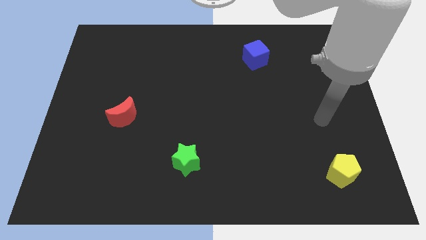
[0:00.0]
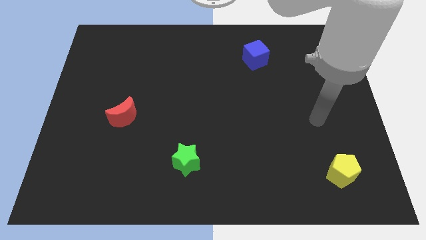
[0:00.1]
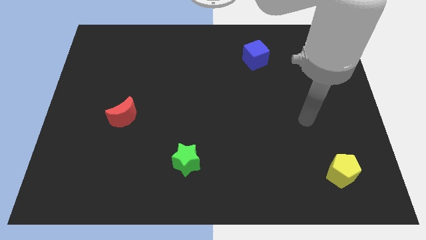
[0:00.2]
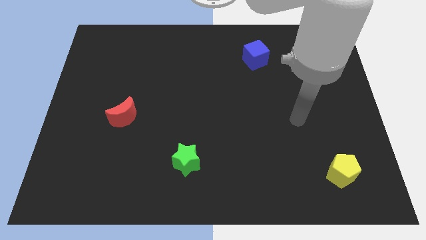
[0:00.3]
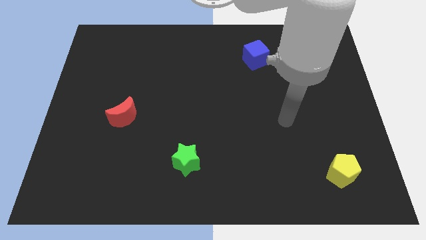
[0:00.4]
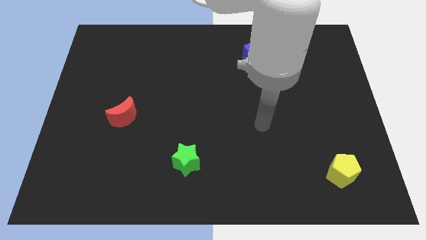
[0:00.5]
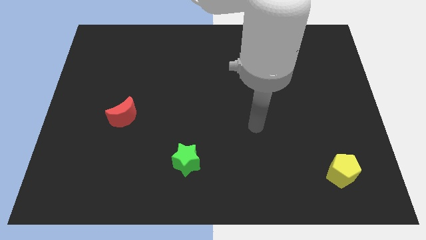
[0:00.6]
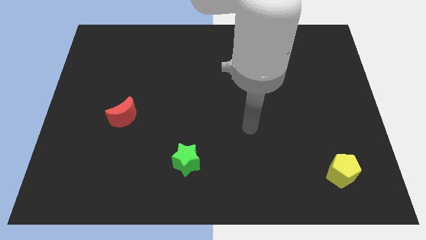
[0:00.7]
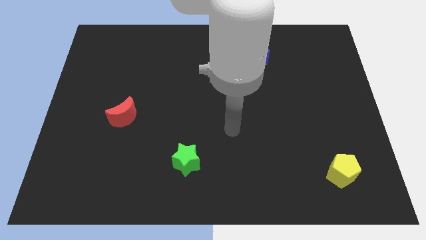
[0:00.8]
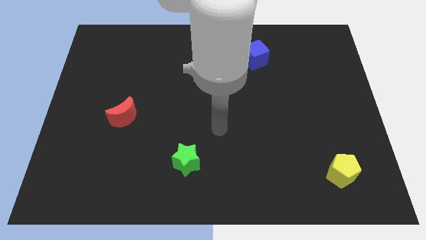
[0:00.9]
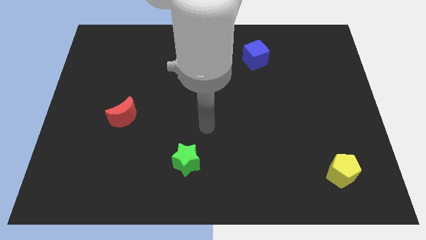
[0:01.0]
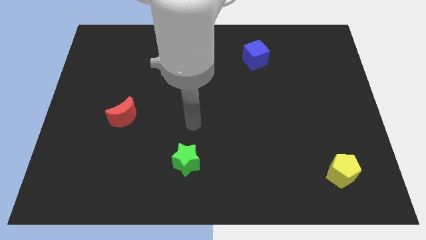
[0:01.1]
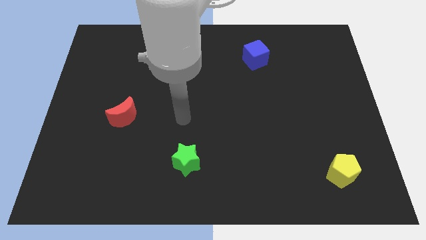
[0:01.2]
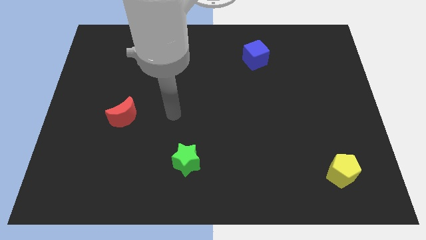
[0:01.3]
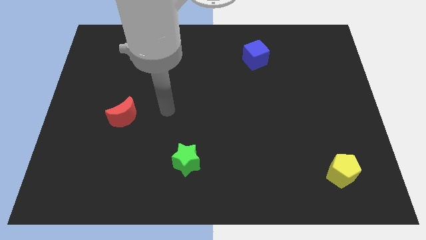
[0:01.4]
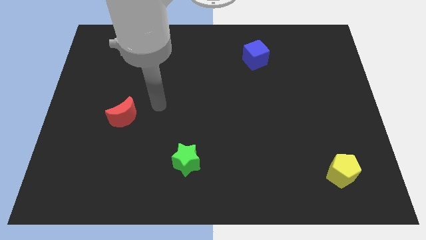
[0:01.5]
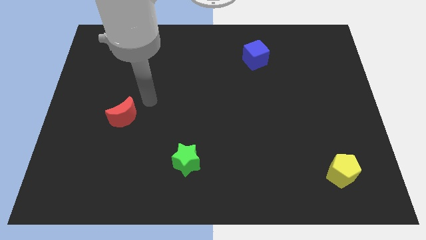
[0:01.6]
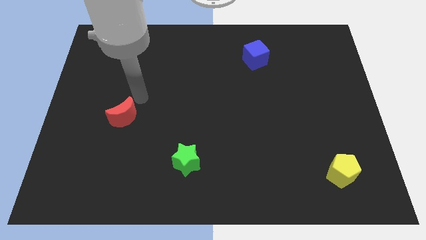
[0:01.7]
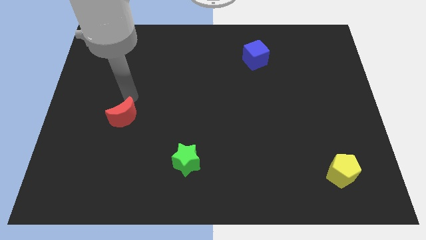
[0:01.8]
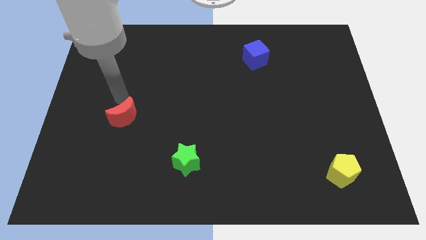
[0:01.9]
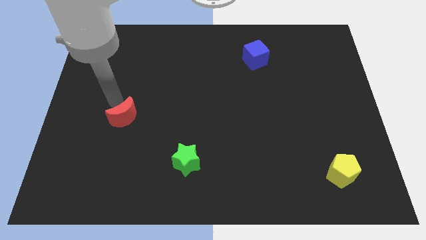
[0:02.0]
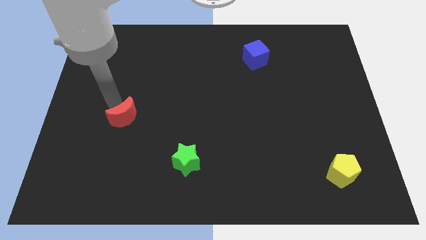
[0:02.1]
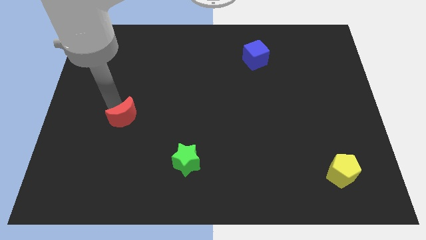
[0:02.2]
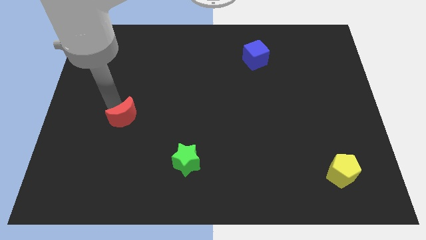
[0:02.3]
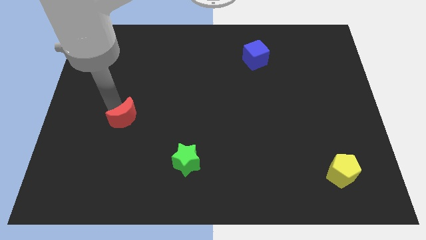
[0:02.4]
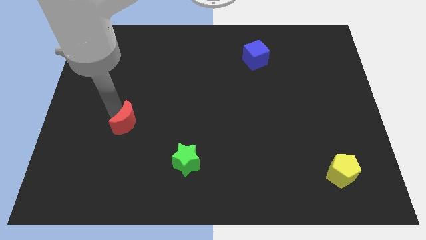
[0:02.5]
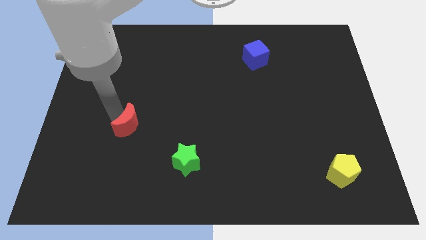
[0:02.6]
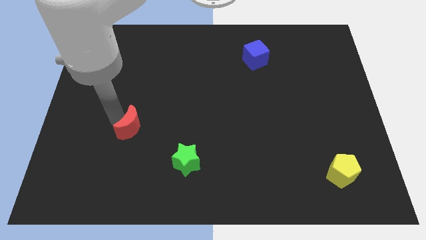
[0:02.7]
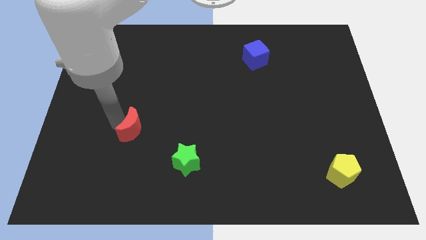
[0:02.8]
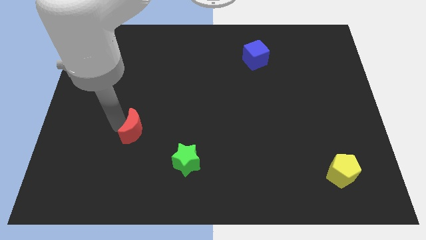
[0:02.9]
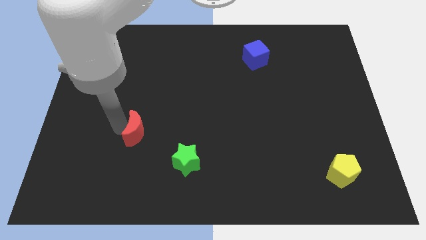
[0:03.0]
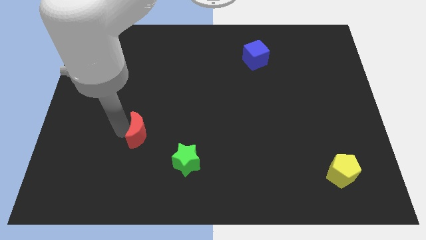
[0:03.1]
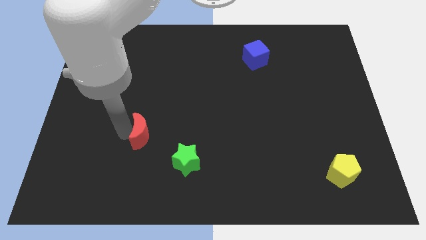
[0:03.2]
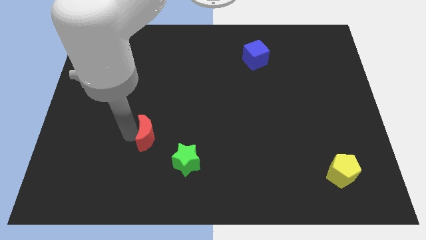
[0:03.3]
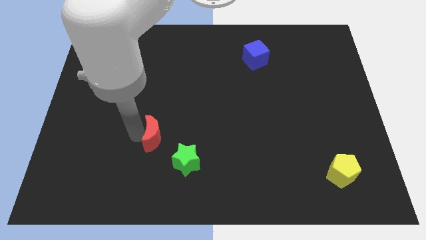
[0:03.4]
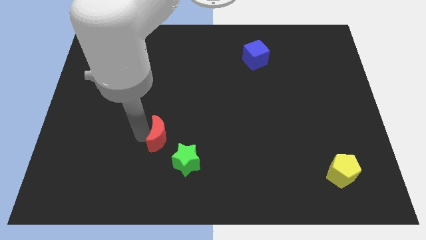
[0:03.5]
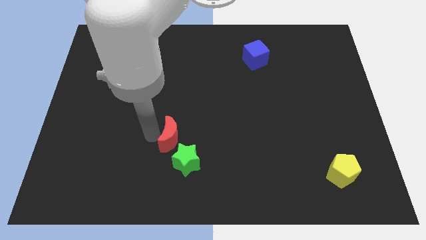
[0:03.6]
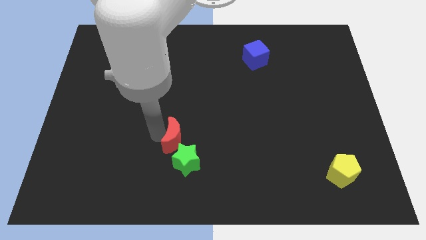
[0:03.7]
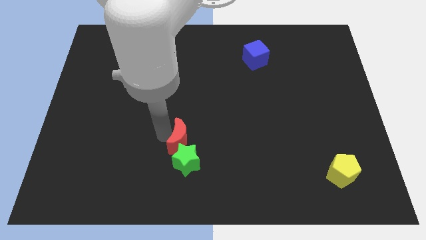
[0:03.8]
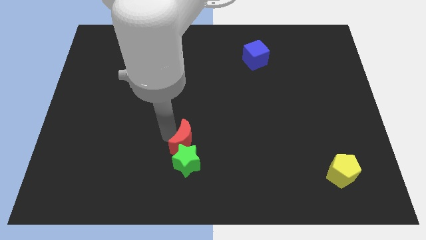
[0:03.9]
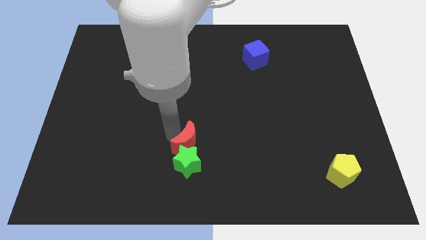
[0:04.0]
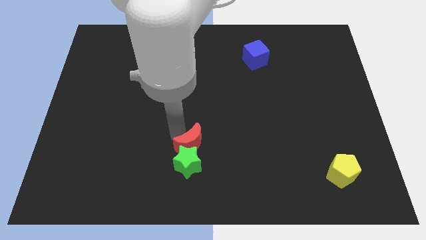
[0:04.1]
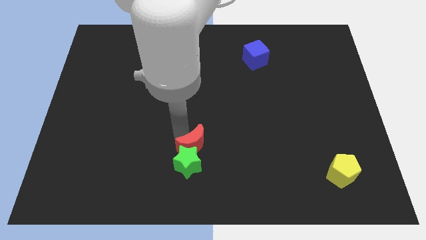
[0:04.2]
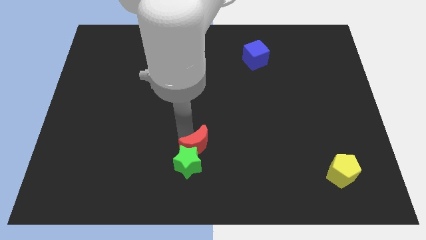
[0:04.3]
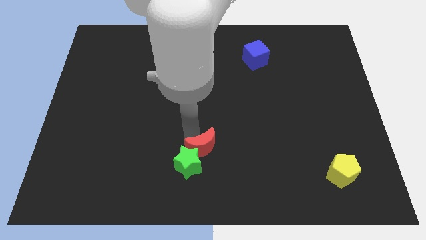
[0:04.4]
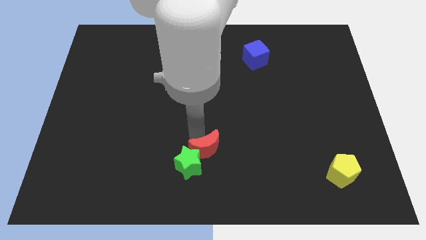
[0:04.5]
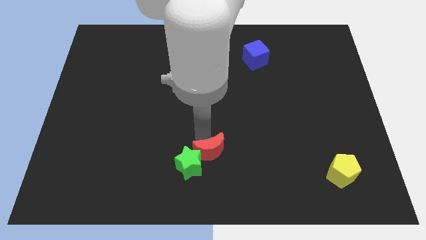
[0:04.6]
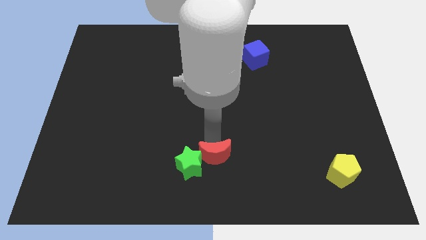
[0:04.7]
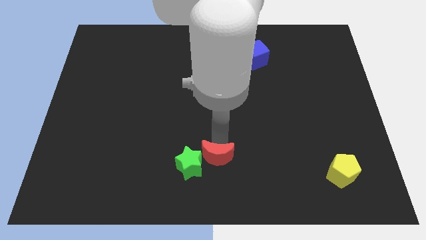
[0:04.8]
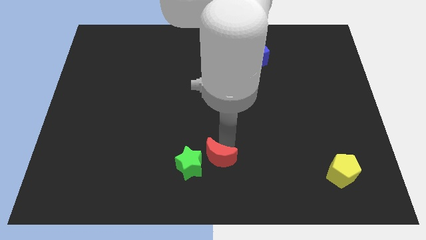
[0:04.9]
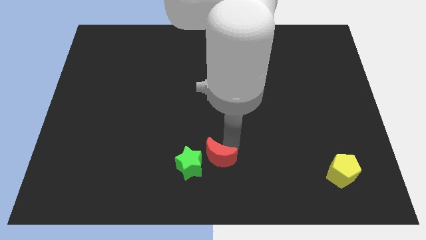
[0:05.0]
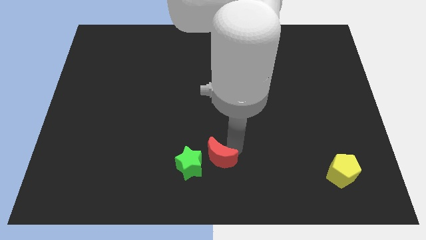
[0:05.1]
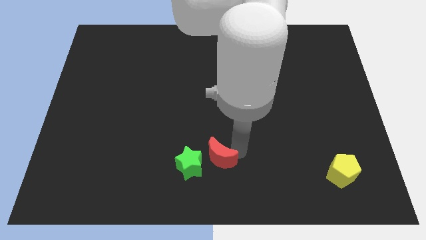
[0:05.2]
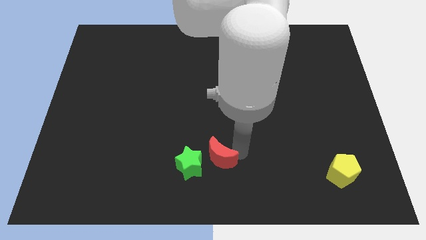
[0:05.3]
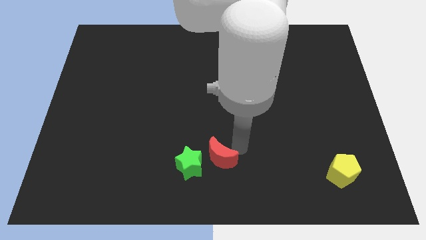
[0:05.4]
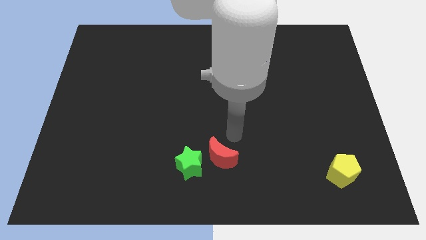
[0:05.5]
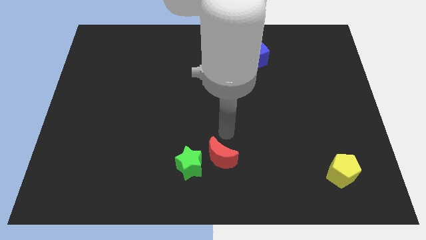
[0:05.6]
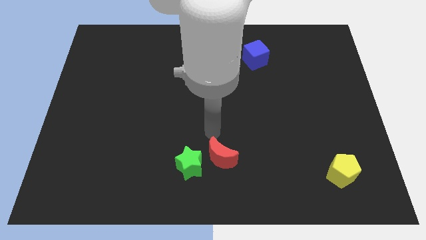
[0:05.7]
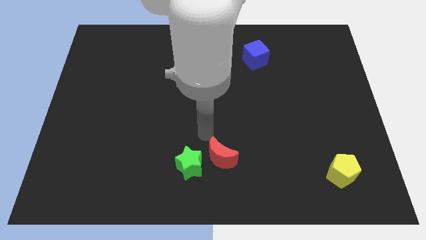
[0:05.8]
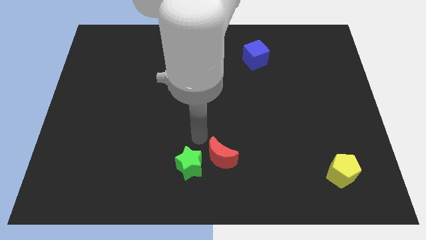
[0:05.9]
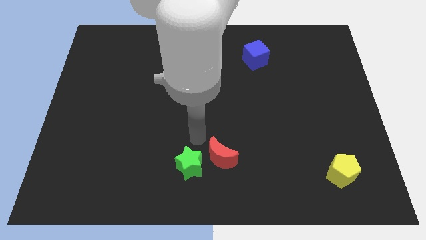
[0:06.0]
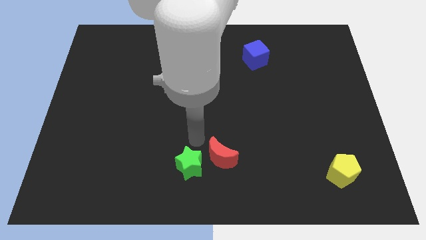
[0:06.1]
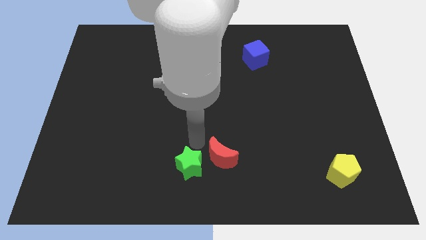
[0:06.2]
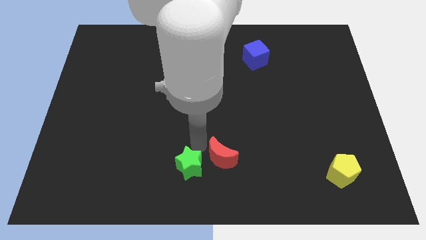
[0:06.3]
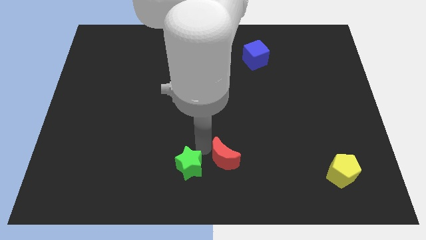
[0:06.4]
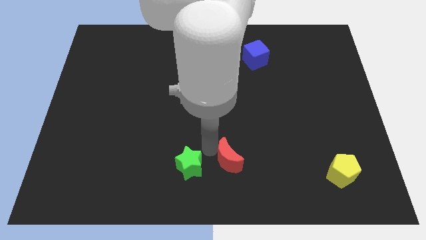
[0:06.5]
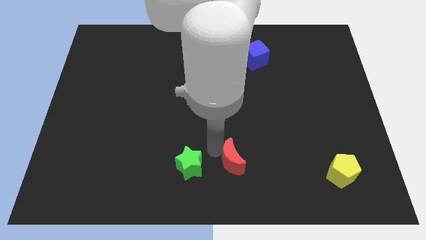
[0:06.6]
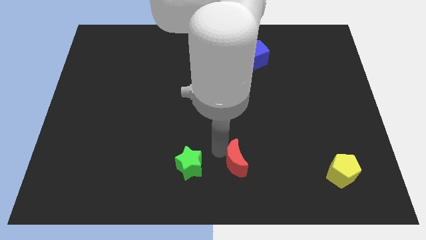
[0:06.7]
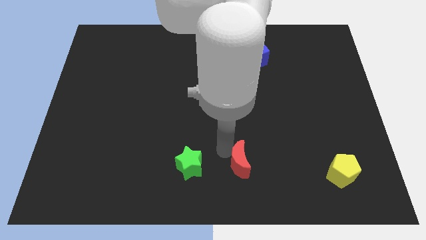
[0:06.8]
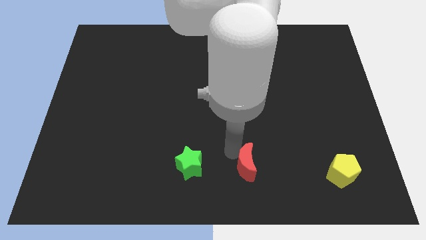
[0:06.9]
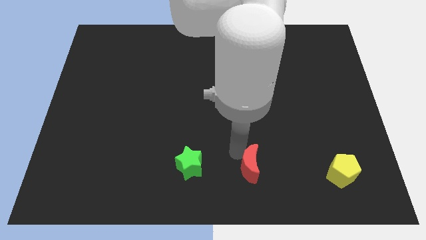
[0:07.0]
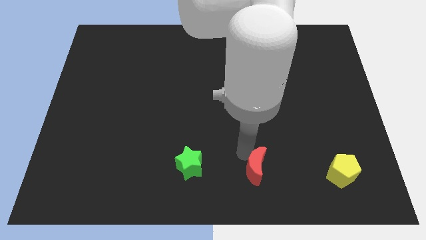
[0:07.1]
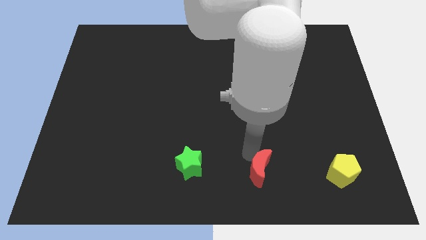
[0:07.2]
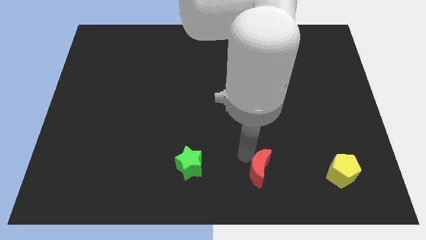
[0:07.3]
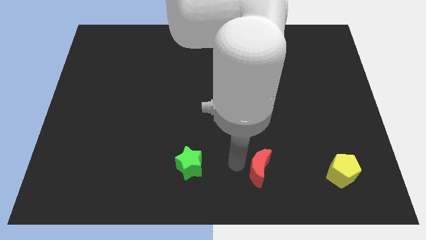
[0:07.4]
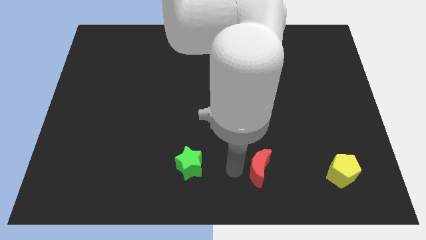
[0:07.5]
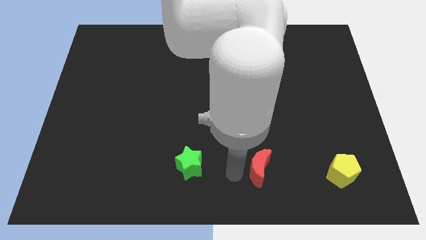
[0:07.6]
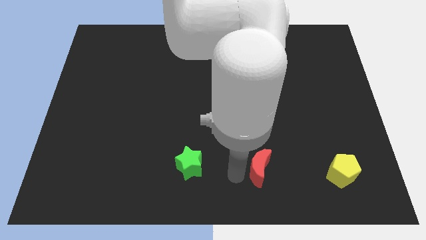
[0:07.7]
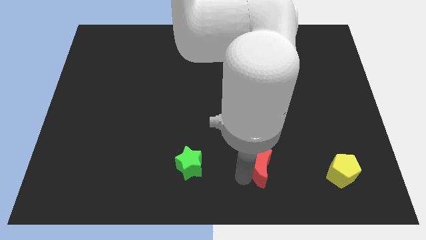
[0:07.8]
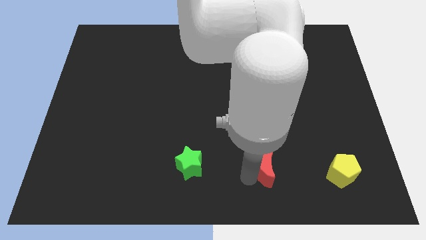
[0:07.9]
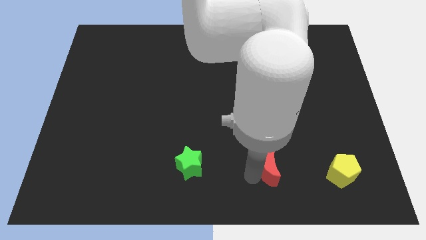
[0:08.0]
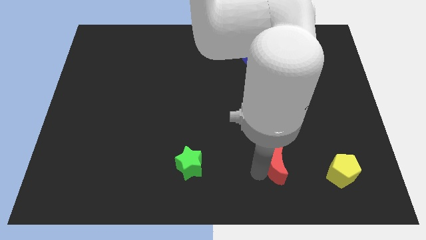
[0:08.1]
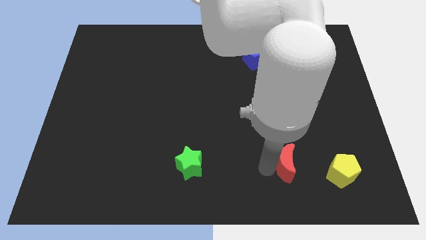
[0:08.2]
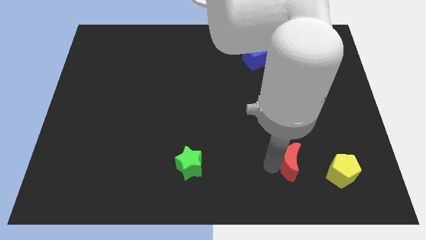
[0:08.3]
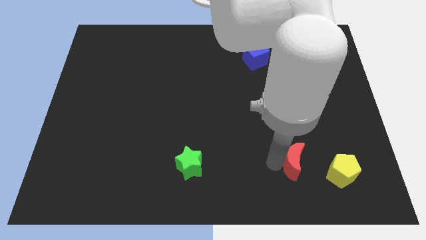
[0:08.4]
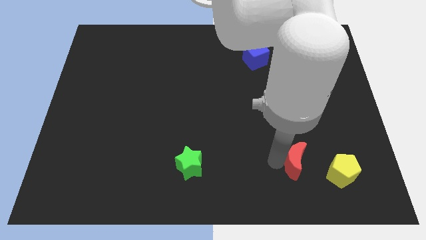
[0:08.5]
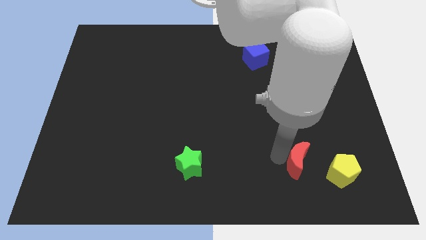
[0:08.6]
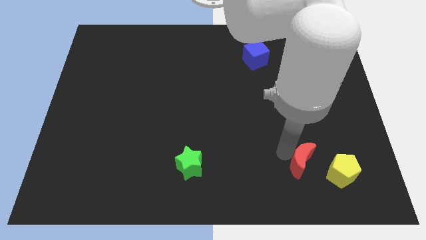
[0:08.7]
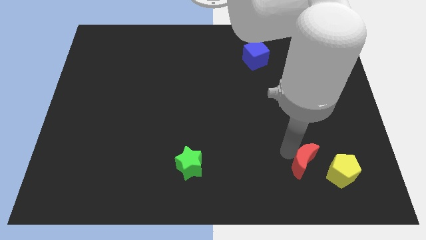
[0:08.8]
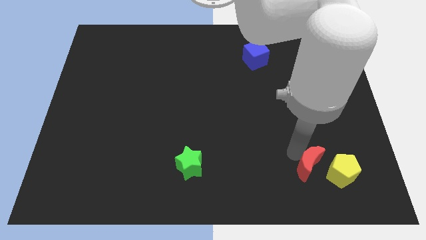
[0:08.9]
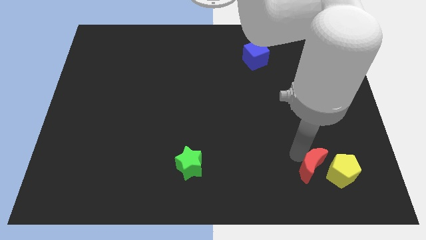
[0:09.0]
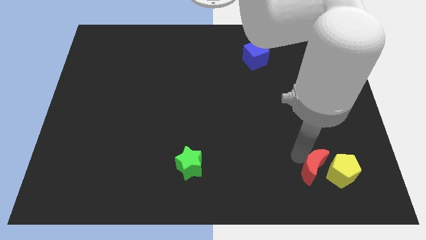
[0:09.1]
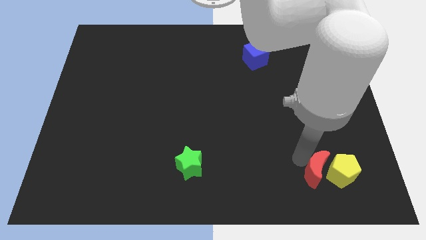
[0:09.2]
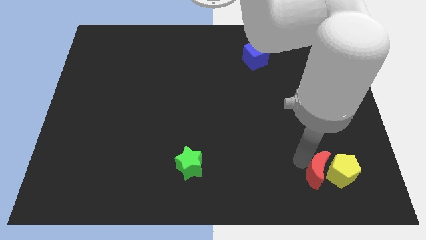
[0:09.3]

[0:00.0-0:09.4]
put the red block towards the yellow pentagon
